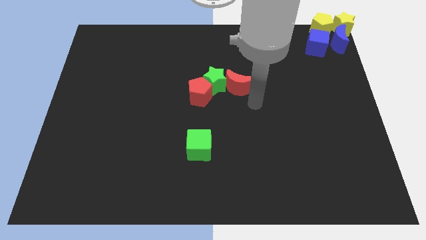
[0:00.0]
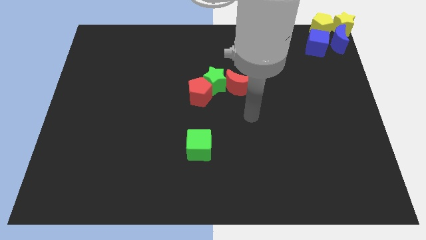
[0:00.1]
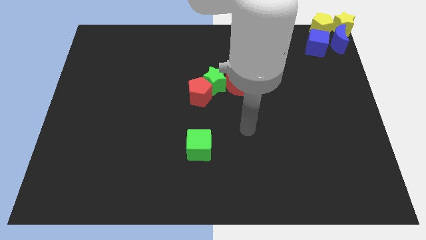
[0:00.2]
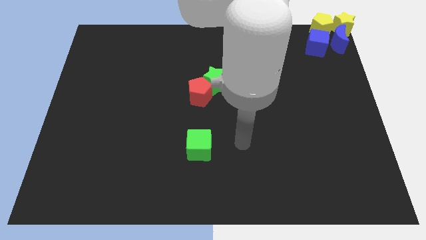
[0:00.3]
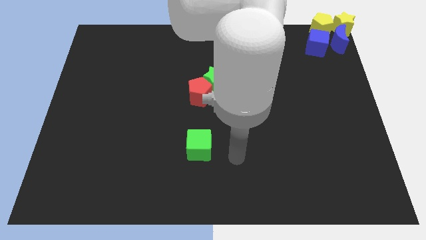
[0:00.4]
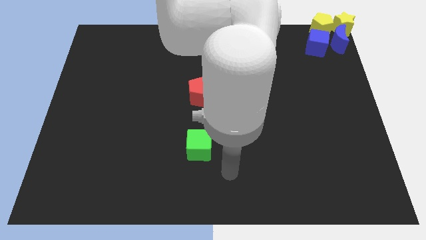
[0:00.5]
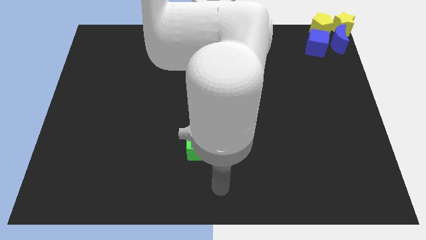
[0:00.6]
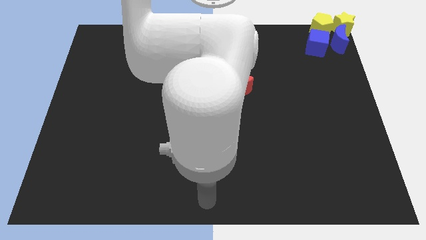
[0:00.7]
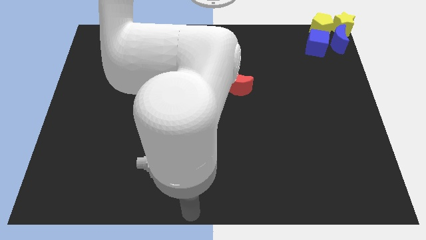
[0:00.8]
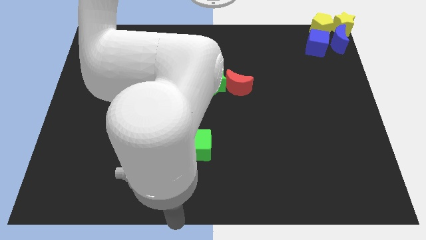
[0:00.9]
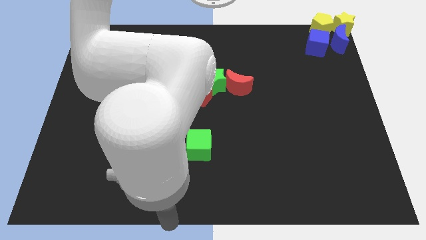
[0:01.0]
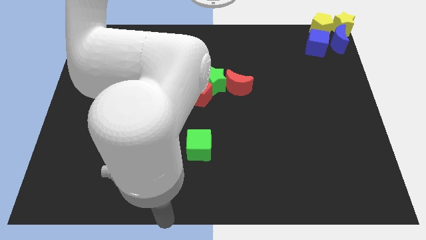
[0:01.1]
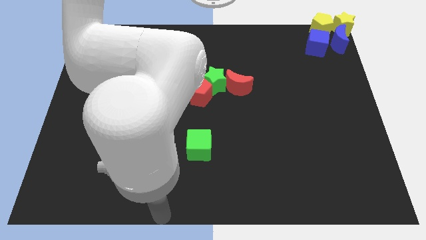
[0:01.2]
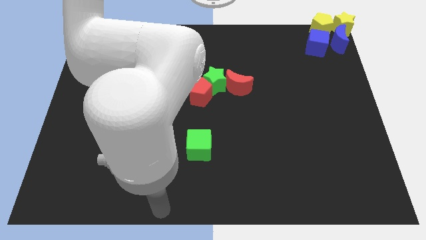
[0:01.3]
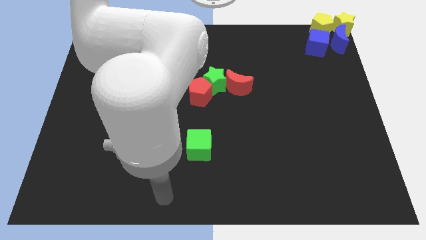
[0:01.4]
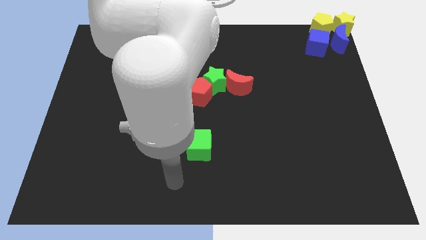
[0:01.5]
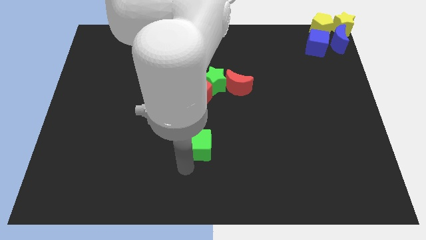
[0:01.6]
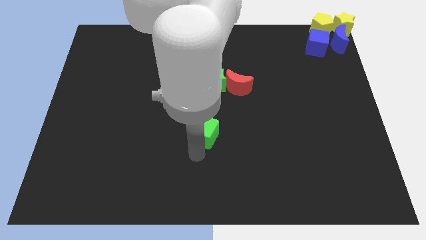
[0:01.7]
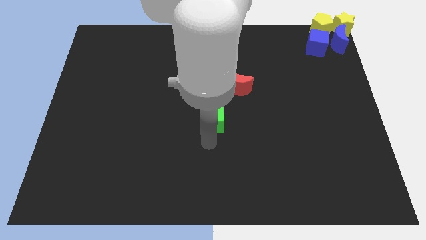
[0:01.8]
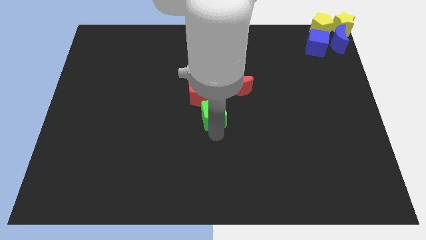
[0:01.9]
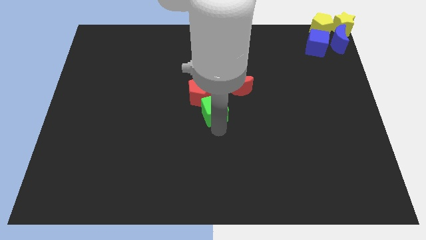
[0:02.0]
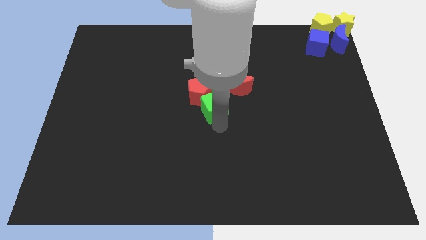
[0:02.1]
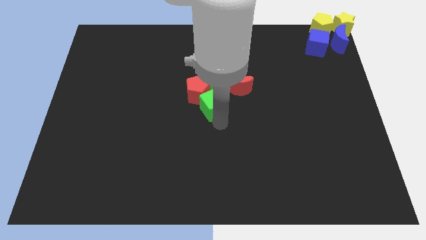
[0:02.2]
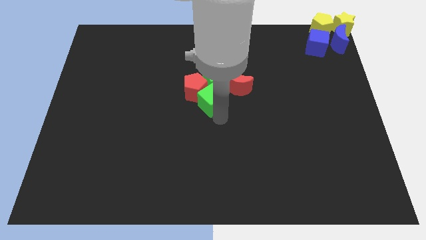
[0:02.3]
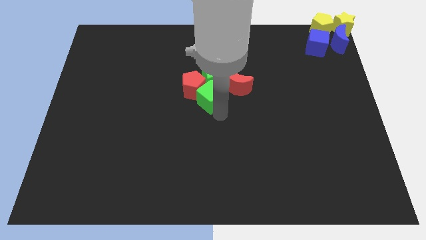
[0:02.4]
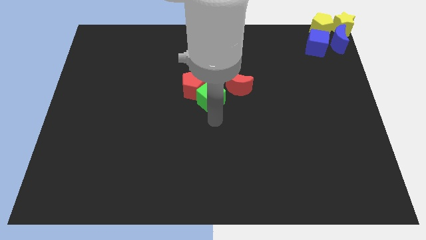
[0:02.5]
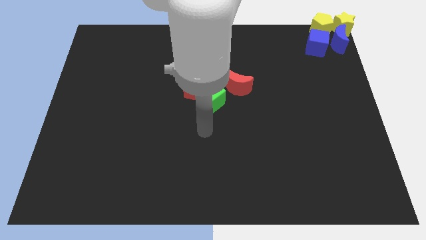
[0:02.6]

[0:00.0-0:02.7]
move the green cube to the center of the board

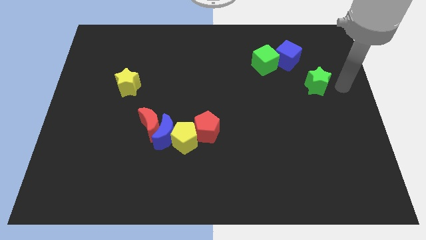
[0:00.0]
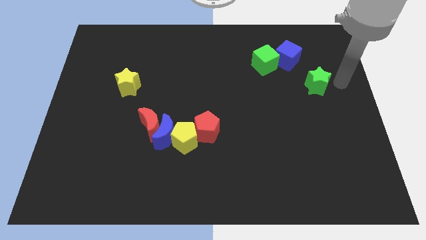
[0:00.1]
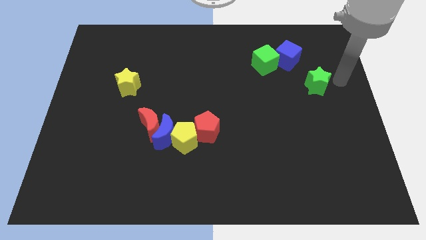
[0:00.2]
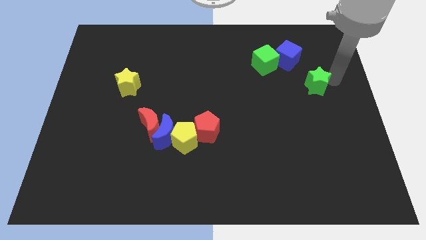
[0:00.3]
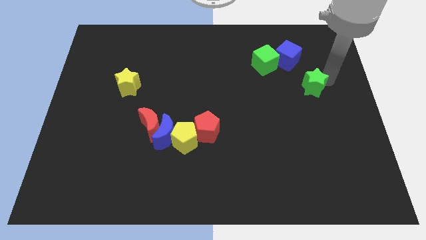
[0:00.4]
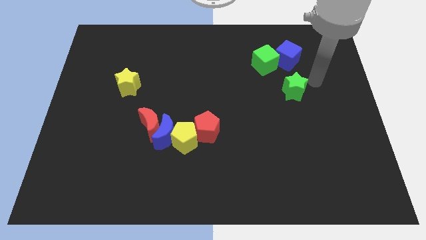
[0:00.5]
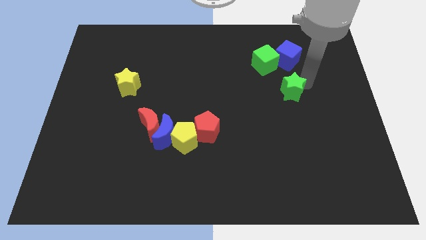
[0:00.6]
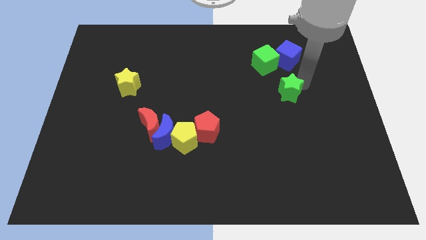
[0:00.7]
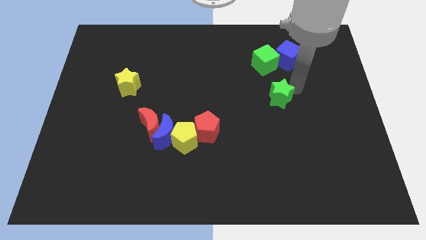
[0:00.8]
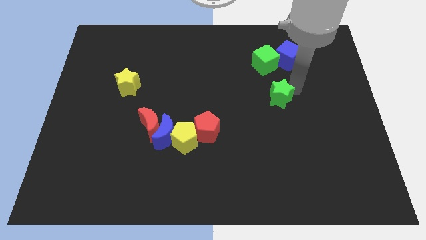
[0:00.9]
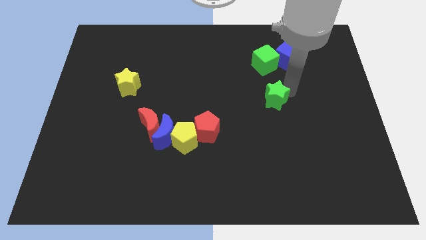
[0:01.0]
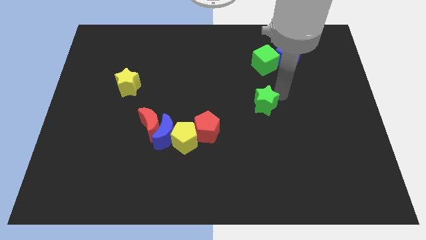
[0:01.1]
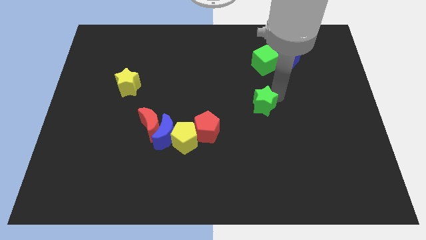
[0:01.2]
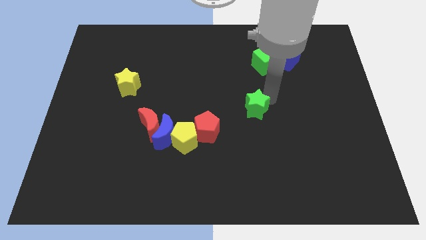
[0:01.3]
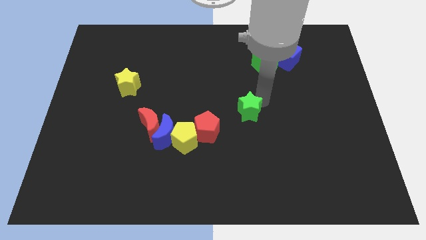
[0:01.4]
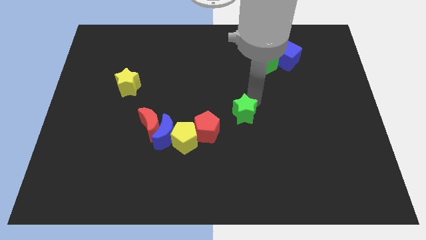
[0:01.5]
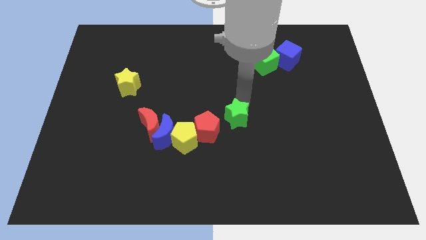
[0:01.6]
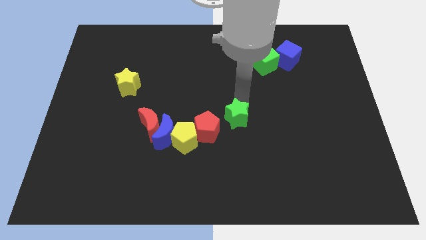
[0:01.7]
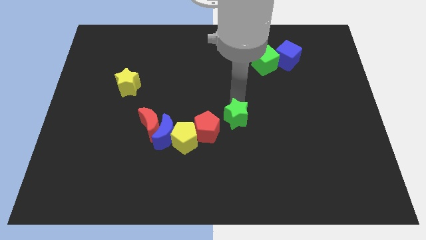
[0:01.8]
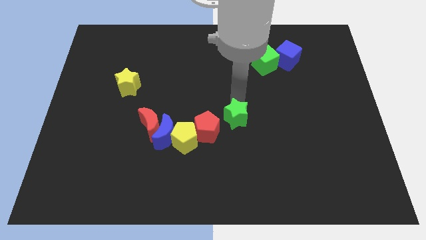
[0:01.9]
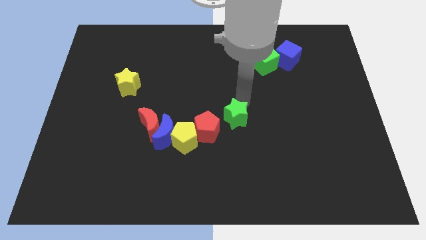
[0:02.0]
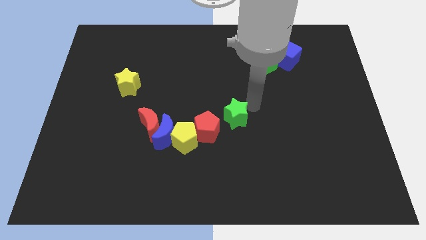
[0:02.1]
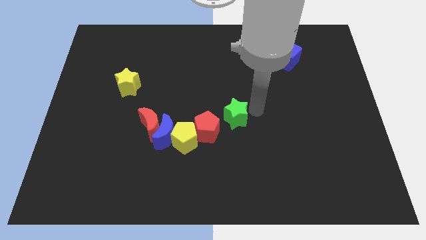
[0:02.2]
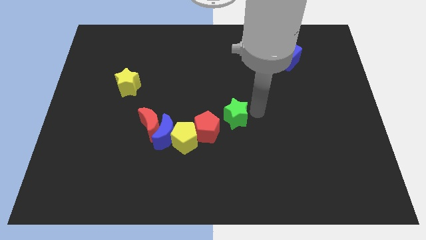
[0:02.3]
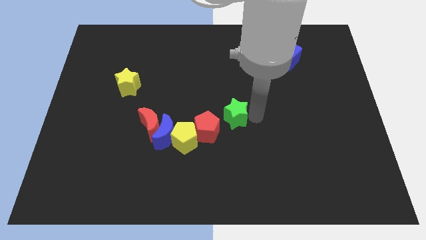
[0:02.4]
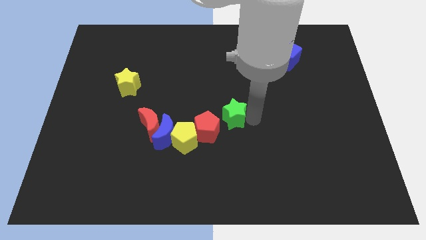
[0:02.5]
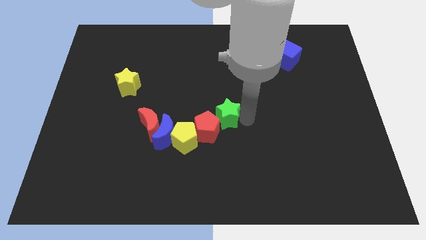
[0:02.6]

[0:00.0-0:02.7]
place the green star beside the red pentagon

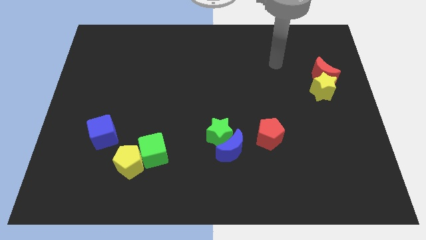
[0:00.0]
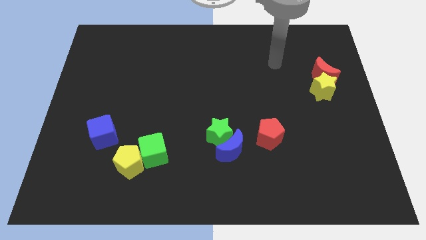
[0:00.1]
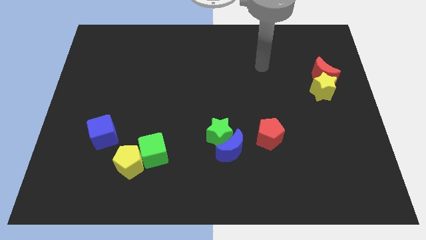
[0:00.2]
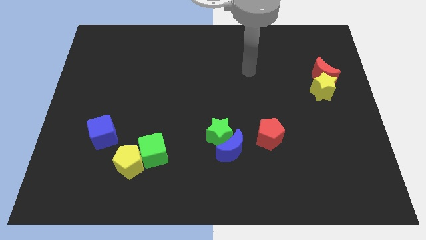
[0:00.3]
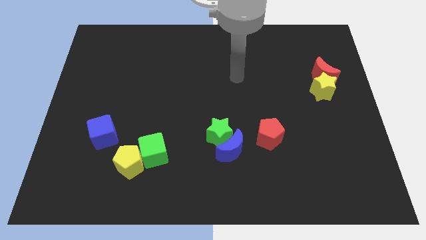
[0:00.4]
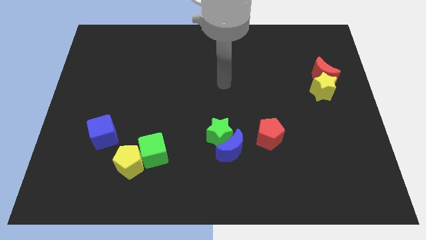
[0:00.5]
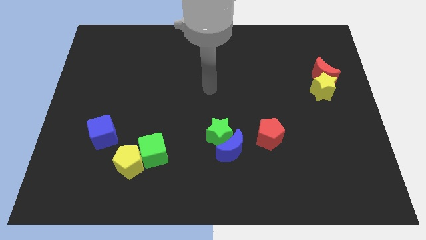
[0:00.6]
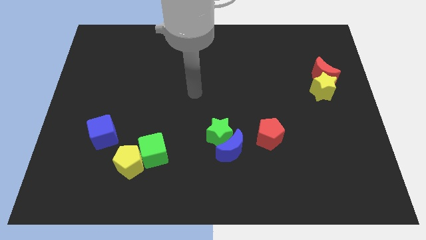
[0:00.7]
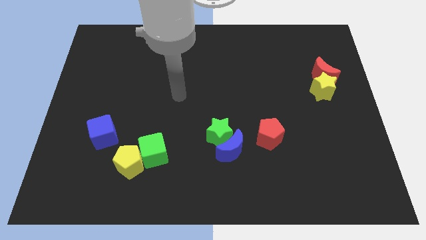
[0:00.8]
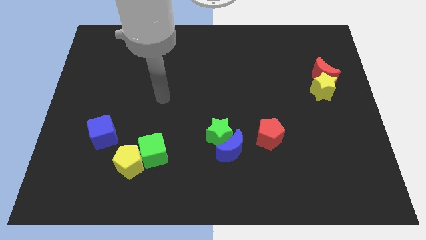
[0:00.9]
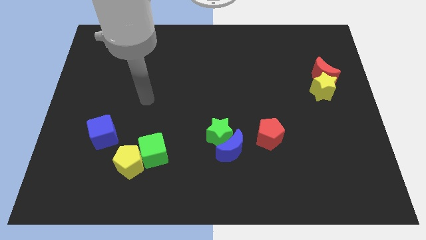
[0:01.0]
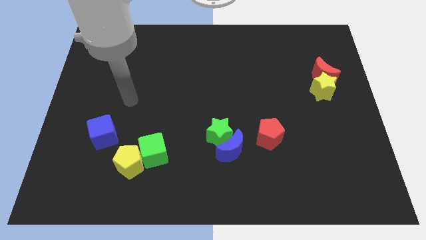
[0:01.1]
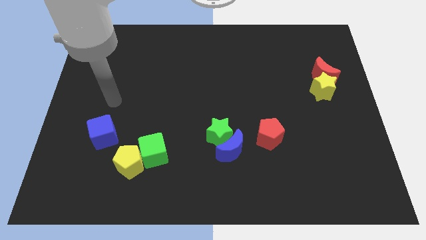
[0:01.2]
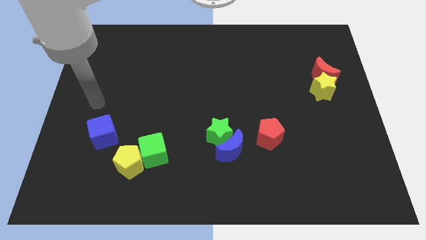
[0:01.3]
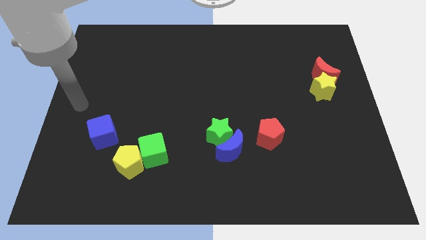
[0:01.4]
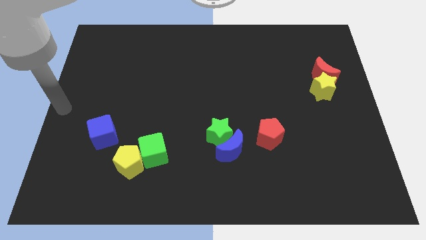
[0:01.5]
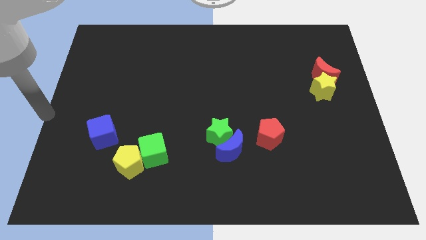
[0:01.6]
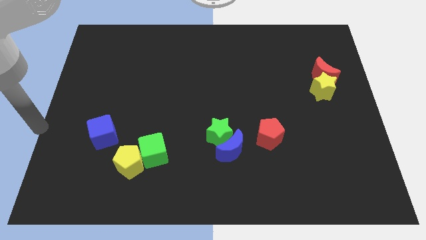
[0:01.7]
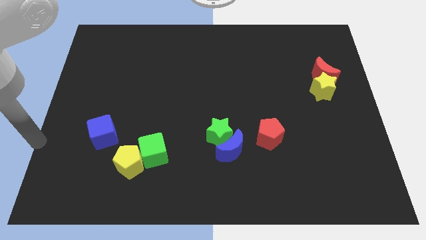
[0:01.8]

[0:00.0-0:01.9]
point your arm to the left of blue cube

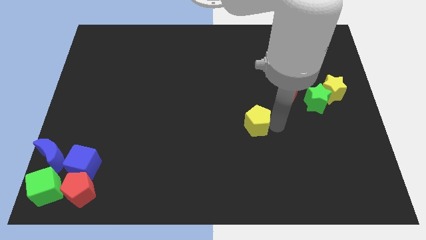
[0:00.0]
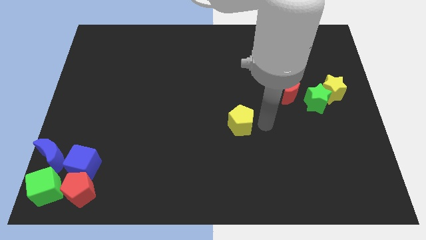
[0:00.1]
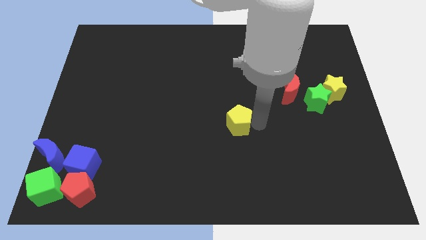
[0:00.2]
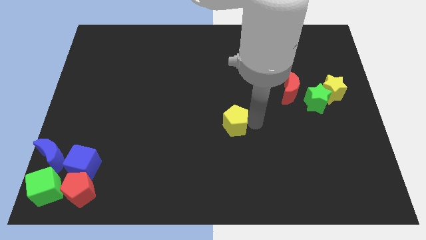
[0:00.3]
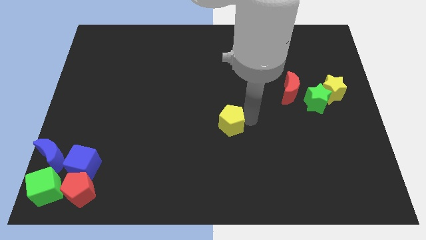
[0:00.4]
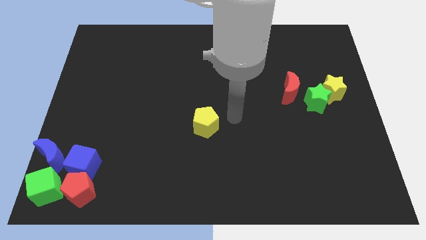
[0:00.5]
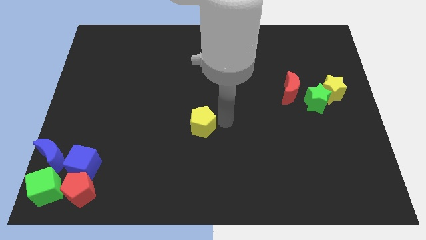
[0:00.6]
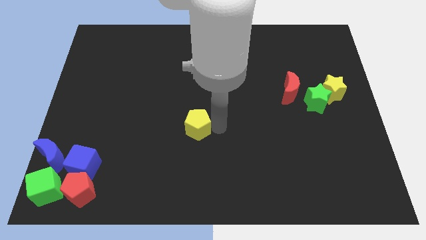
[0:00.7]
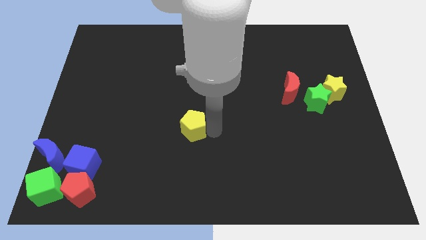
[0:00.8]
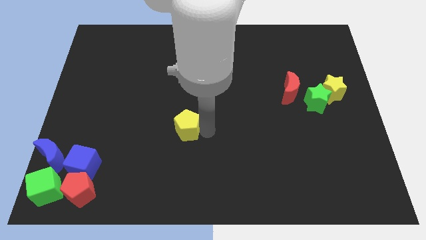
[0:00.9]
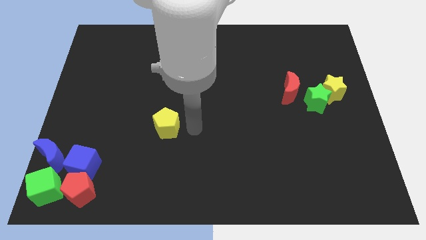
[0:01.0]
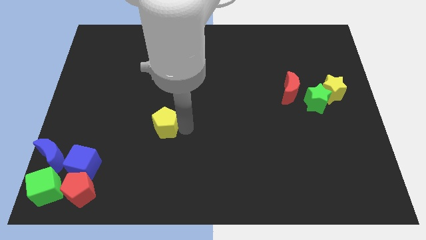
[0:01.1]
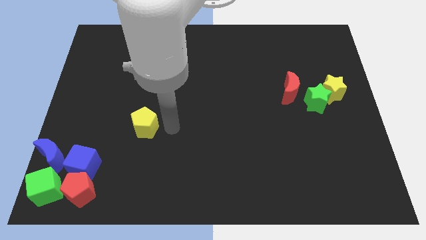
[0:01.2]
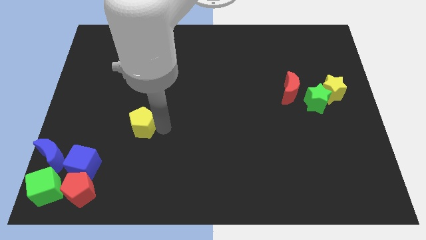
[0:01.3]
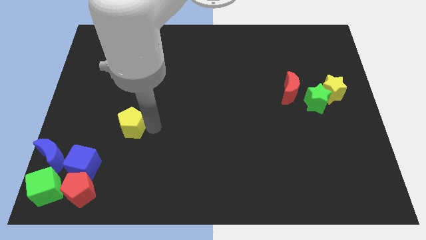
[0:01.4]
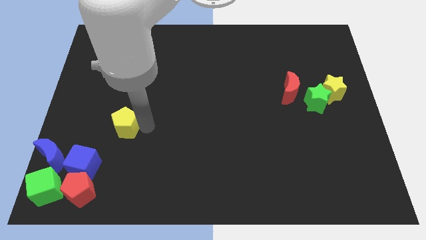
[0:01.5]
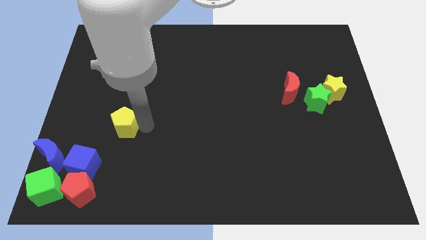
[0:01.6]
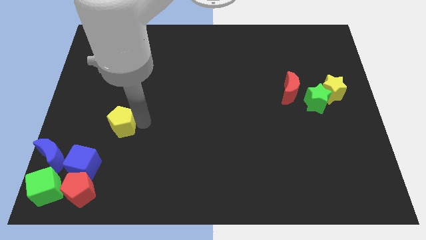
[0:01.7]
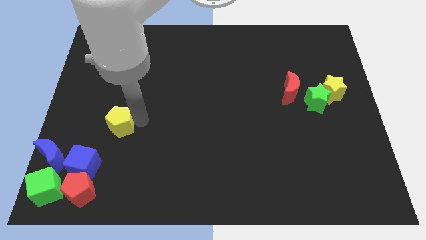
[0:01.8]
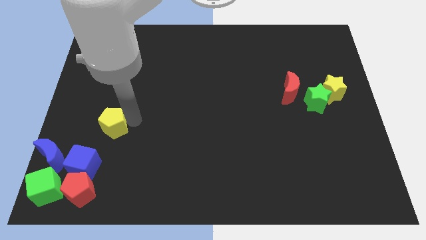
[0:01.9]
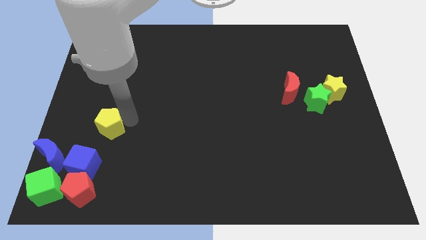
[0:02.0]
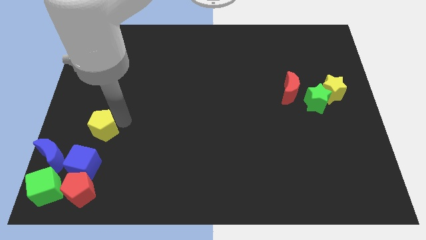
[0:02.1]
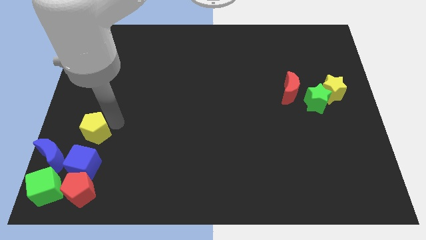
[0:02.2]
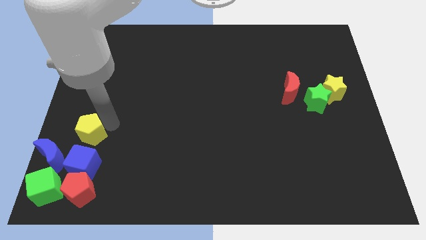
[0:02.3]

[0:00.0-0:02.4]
move the yellow pentagon above the blue cube
